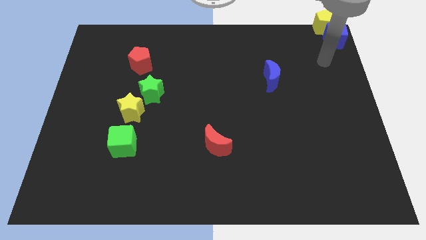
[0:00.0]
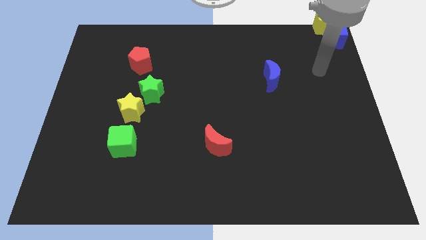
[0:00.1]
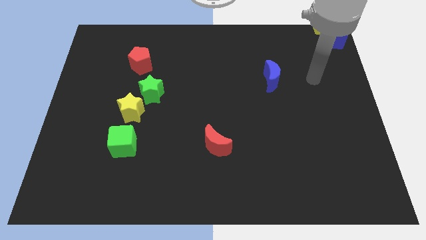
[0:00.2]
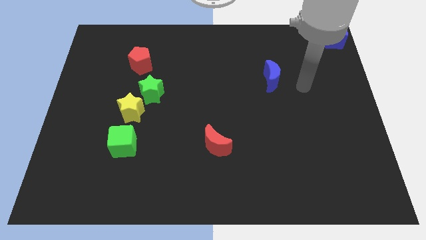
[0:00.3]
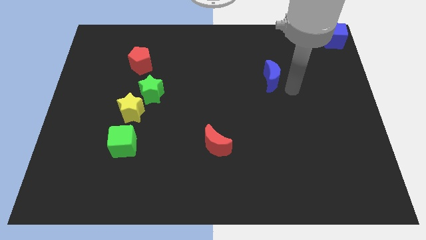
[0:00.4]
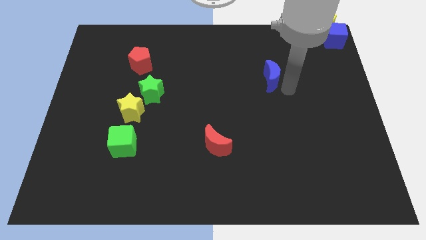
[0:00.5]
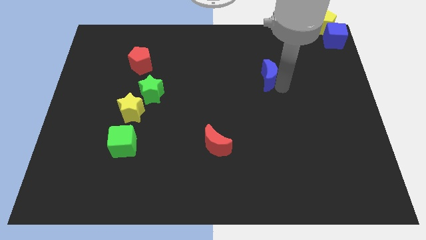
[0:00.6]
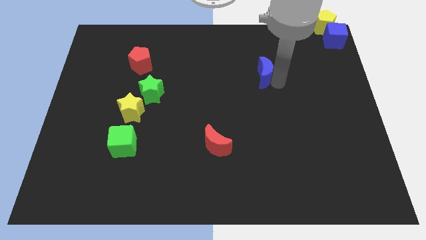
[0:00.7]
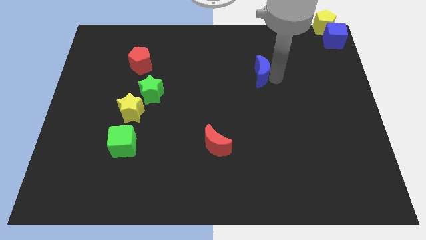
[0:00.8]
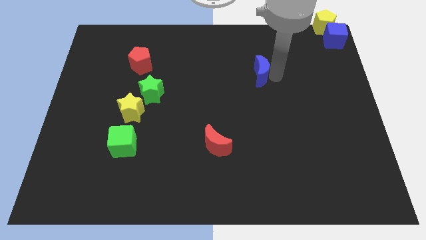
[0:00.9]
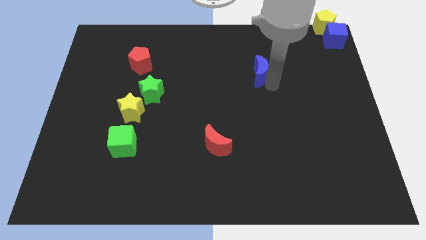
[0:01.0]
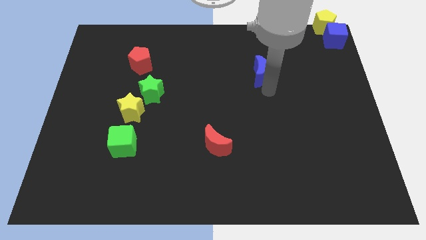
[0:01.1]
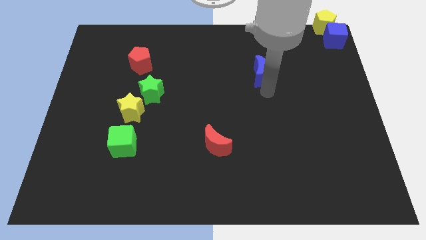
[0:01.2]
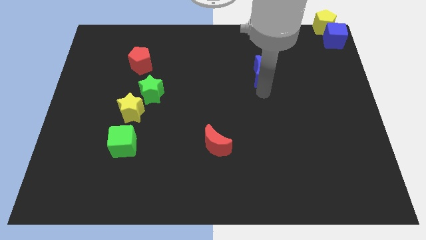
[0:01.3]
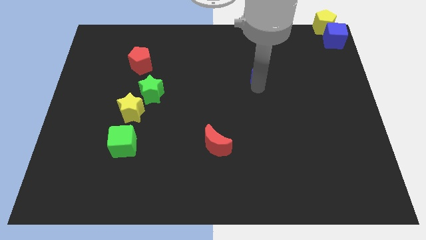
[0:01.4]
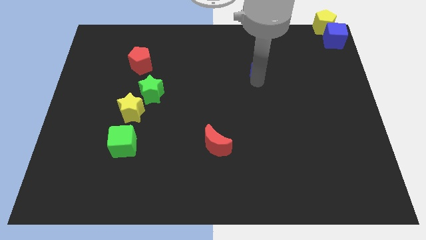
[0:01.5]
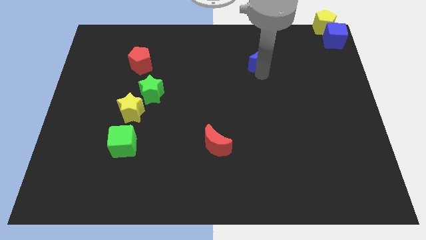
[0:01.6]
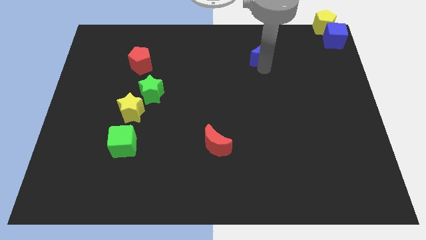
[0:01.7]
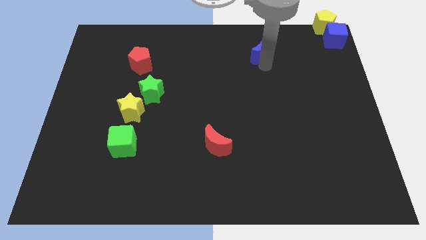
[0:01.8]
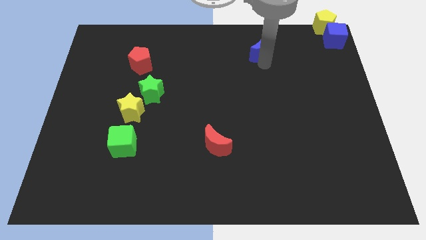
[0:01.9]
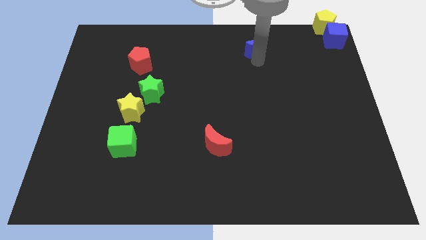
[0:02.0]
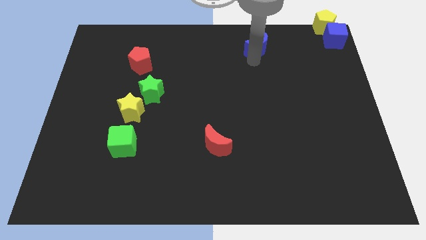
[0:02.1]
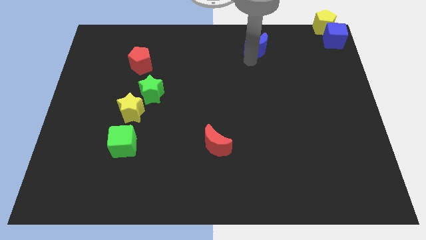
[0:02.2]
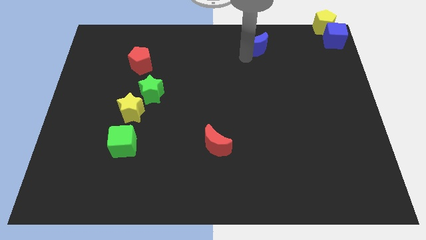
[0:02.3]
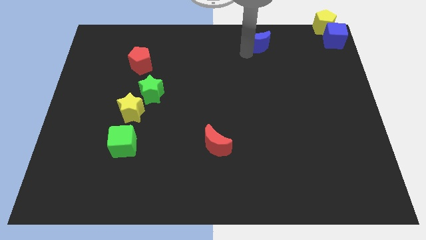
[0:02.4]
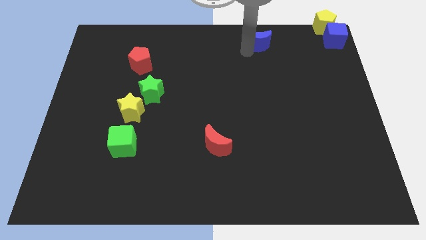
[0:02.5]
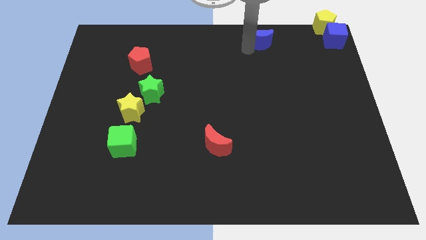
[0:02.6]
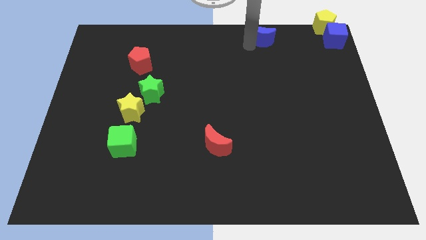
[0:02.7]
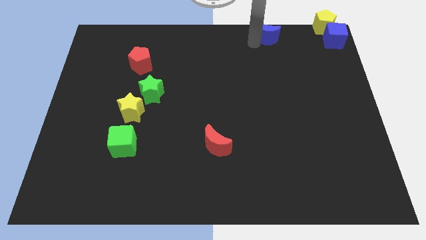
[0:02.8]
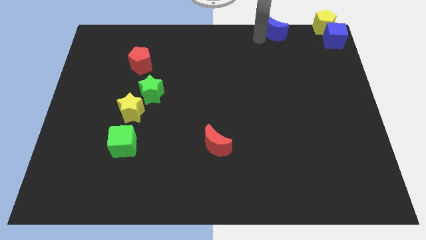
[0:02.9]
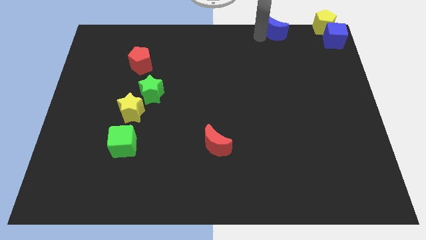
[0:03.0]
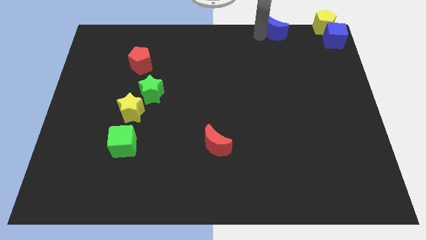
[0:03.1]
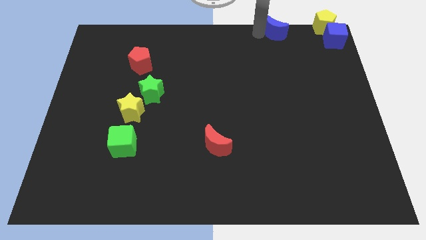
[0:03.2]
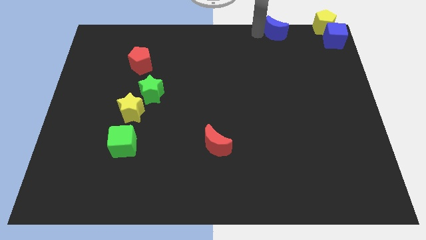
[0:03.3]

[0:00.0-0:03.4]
drag the blue moon towards top right

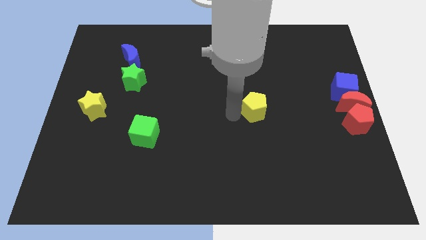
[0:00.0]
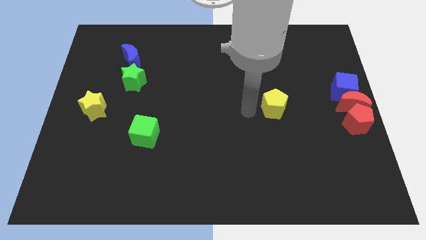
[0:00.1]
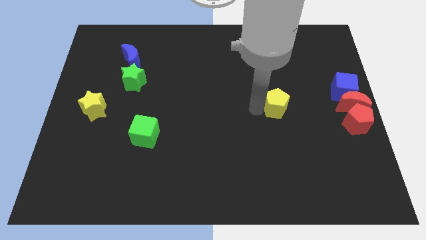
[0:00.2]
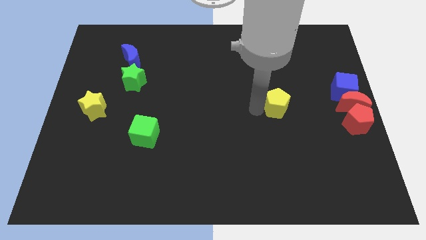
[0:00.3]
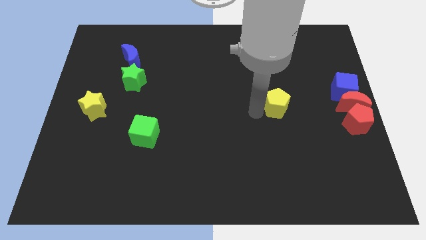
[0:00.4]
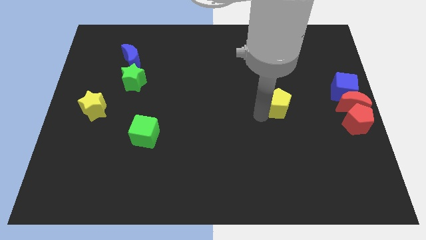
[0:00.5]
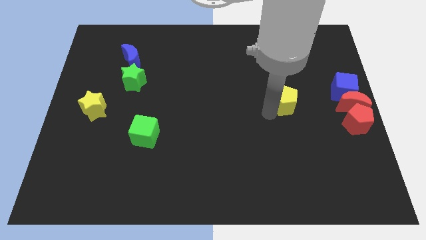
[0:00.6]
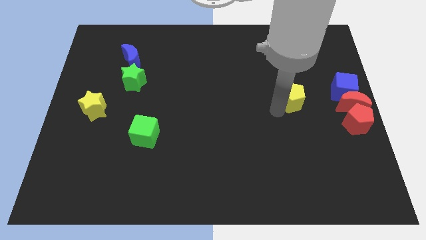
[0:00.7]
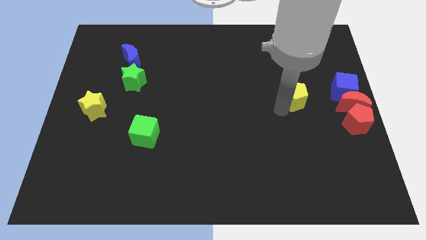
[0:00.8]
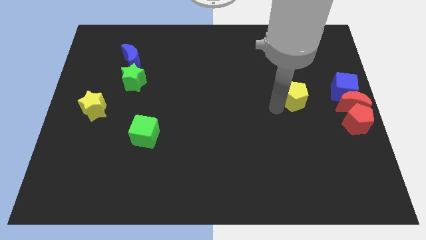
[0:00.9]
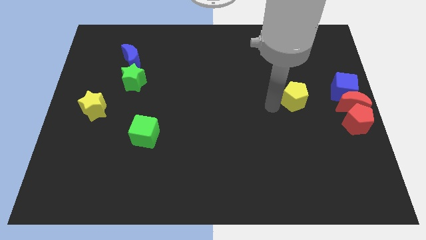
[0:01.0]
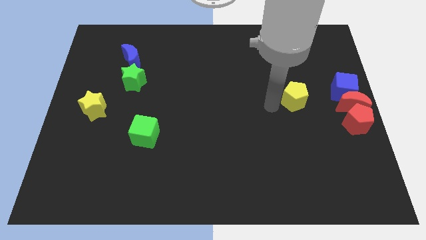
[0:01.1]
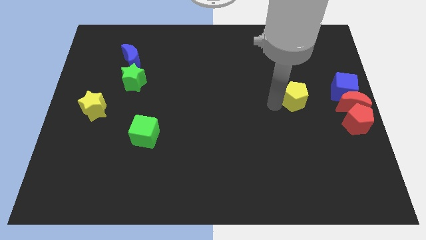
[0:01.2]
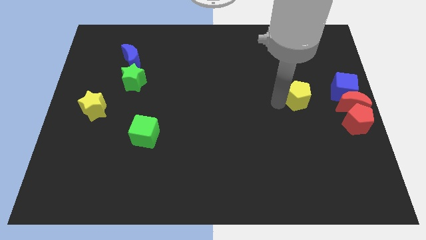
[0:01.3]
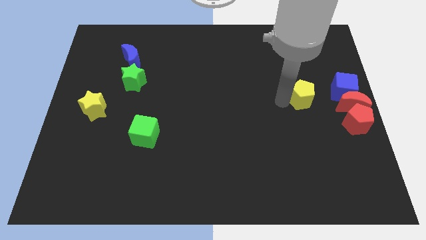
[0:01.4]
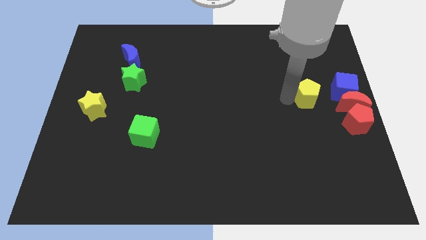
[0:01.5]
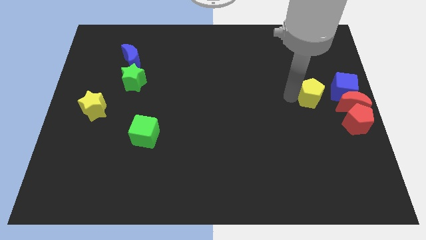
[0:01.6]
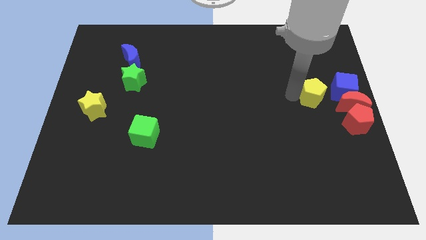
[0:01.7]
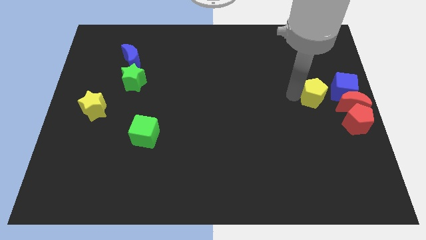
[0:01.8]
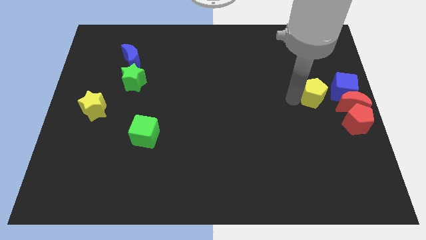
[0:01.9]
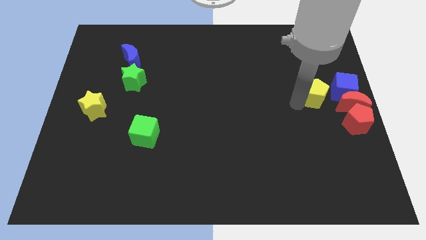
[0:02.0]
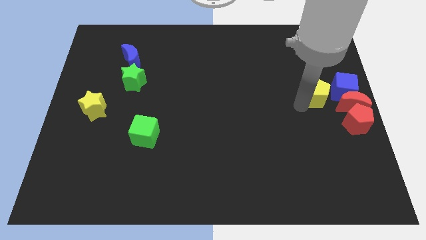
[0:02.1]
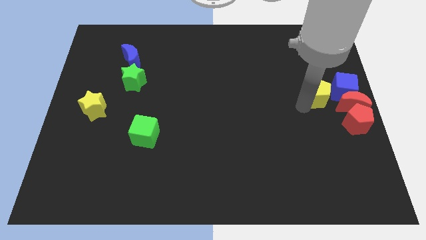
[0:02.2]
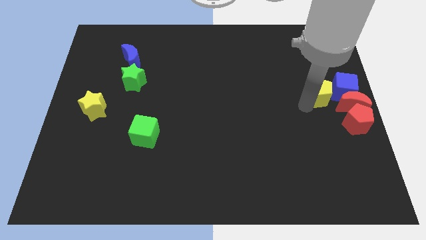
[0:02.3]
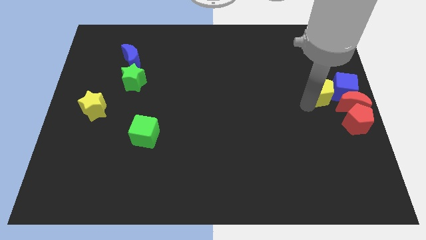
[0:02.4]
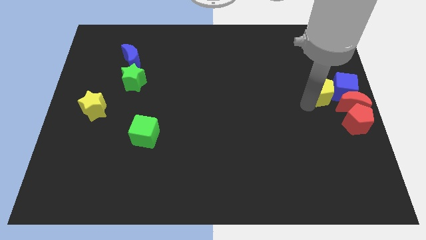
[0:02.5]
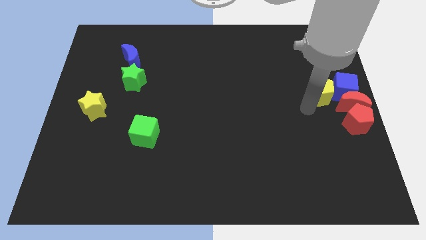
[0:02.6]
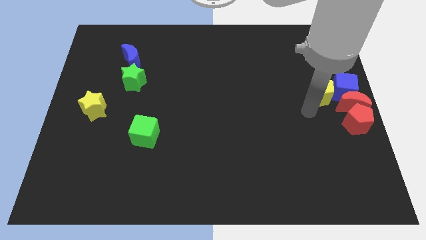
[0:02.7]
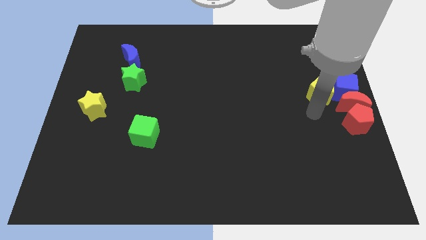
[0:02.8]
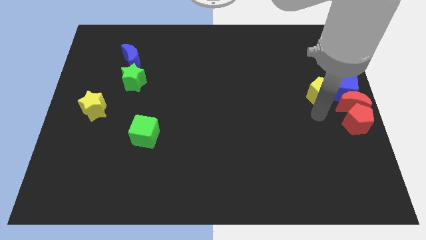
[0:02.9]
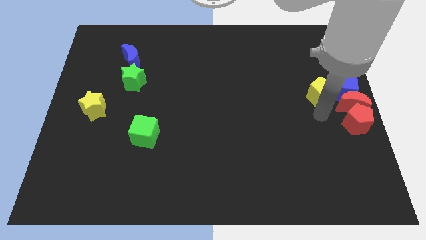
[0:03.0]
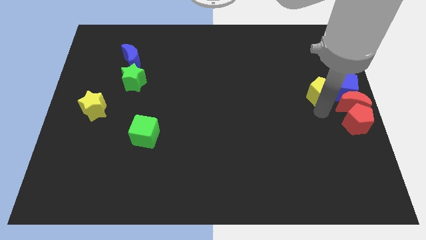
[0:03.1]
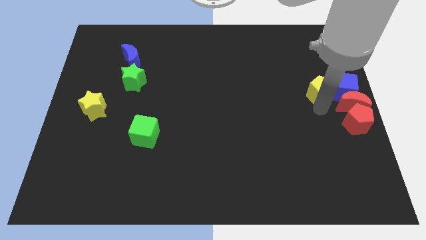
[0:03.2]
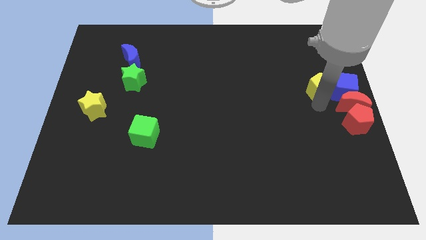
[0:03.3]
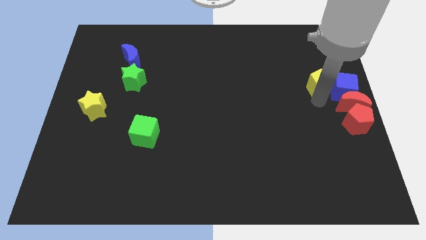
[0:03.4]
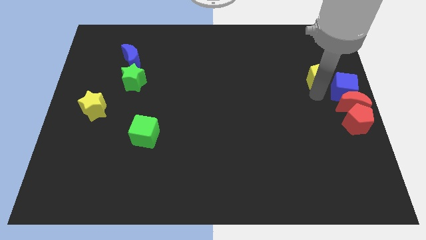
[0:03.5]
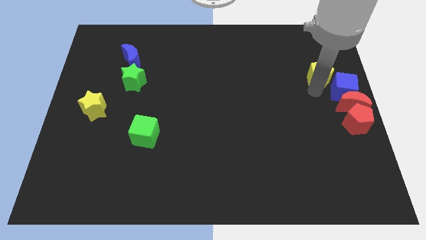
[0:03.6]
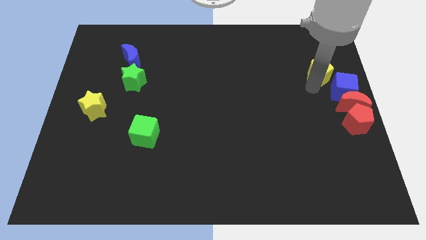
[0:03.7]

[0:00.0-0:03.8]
place the yellow pentagon towards the top left side of the blue cube

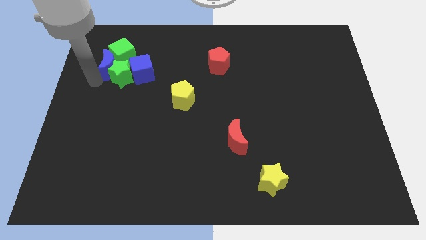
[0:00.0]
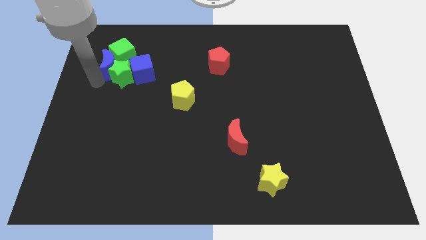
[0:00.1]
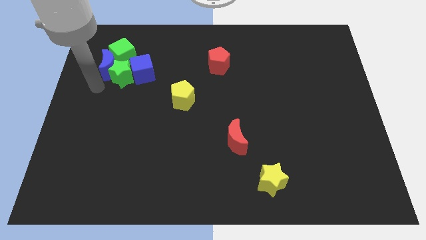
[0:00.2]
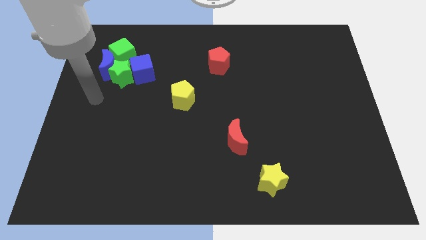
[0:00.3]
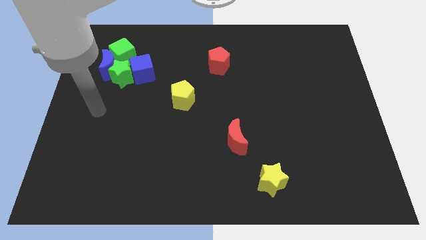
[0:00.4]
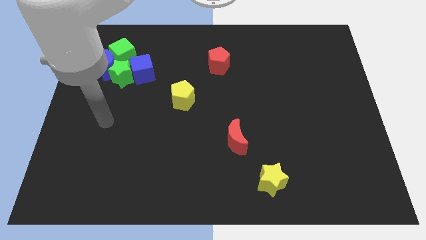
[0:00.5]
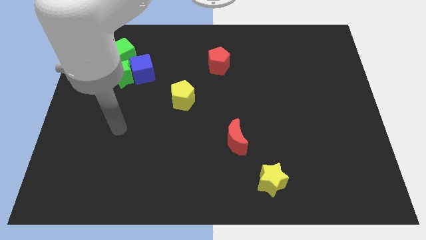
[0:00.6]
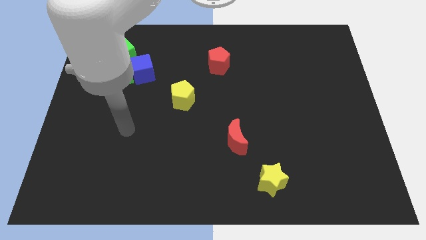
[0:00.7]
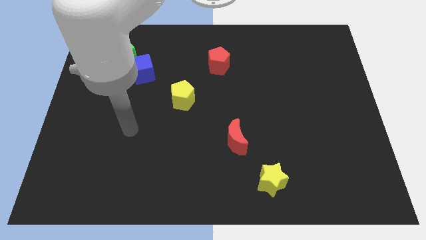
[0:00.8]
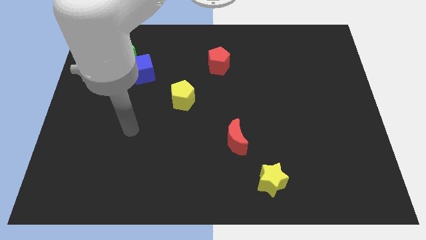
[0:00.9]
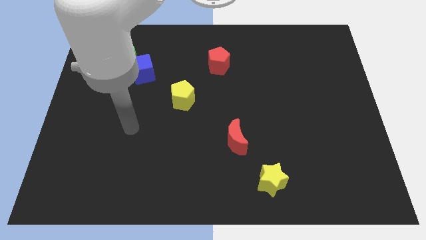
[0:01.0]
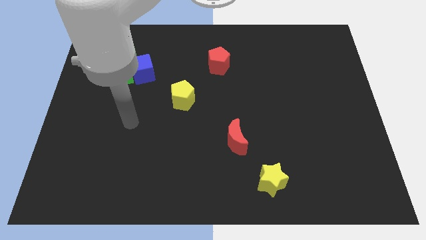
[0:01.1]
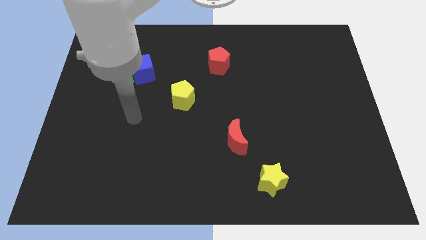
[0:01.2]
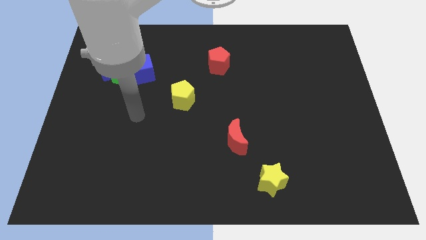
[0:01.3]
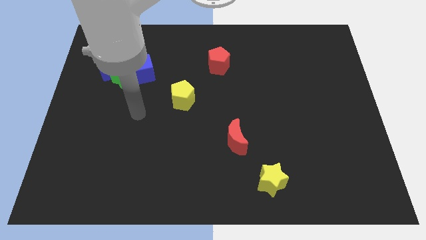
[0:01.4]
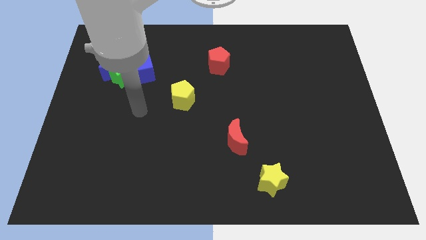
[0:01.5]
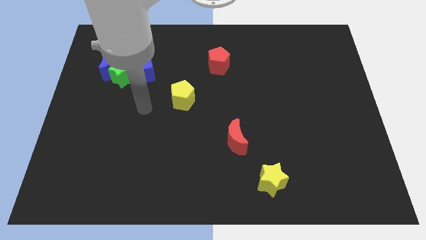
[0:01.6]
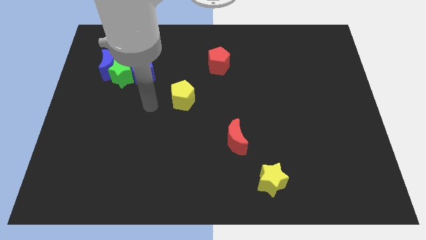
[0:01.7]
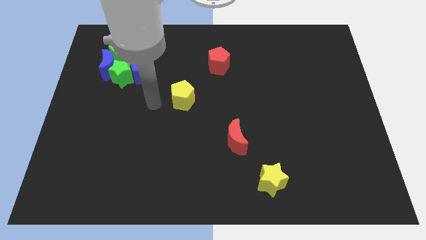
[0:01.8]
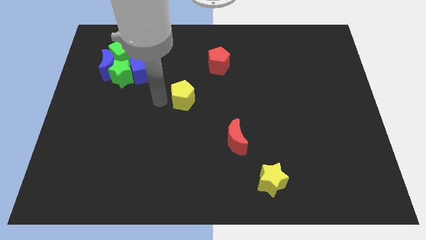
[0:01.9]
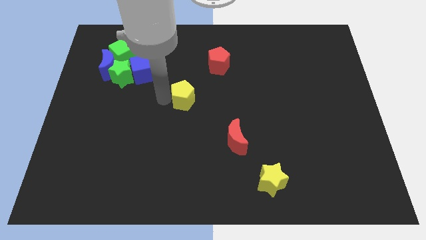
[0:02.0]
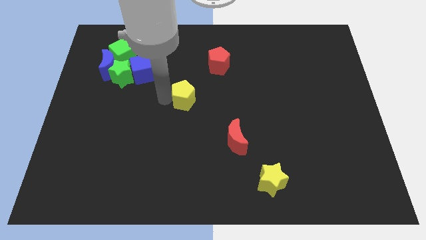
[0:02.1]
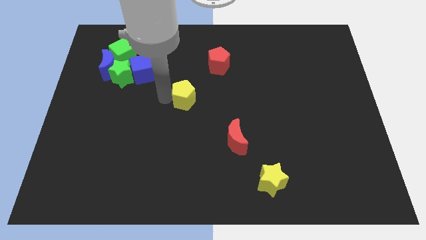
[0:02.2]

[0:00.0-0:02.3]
move your arm away from the blue moon
